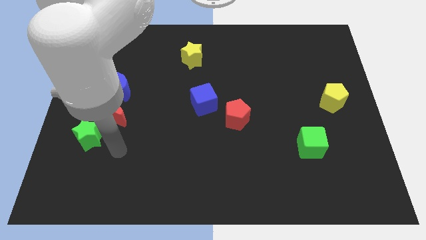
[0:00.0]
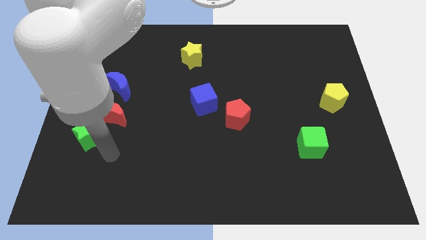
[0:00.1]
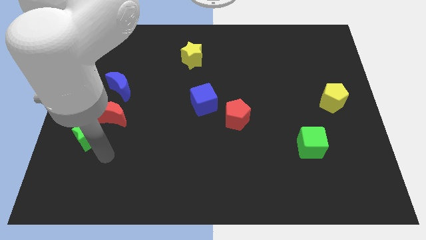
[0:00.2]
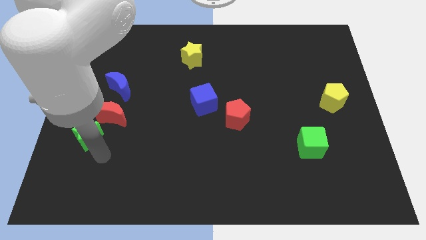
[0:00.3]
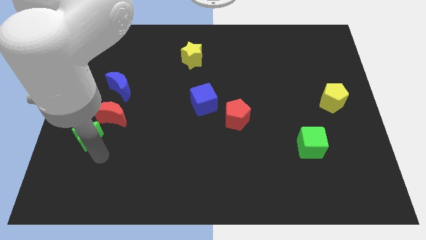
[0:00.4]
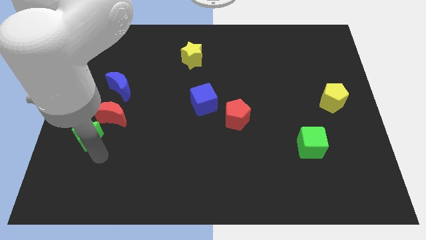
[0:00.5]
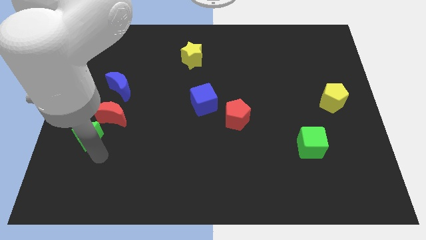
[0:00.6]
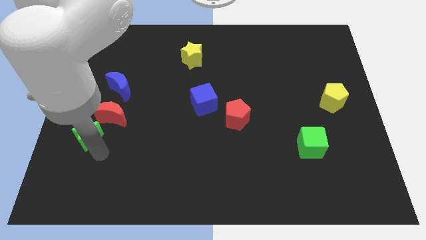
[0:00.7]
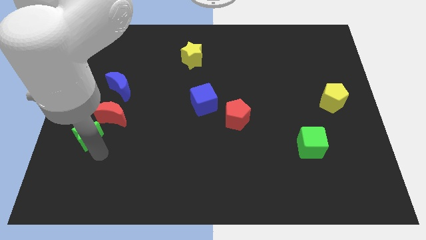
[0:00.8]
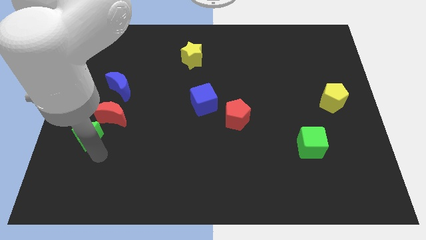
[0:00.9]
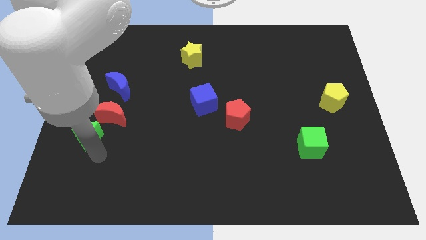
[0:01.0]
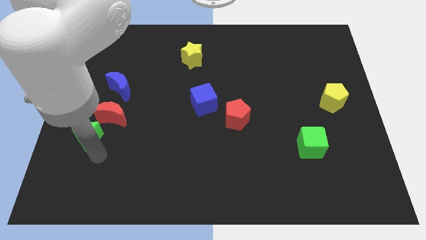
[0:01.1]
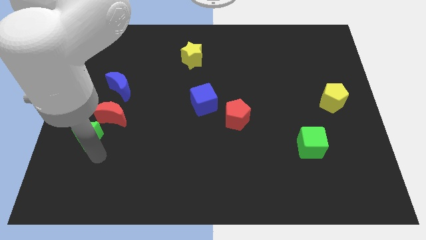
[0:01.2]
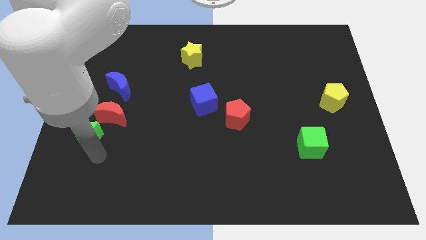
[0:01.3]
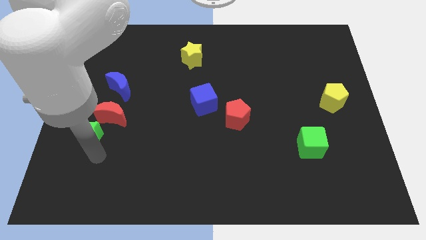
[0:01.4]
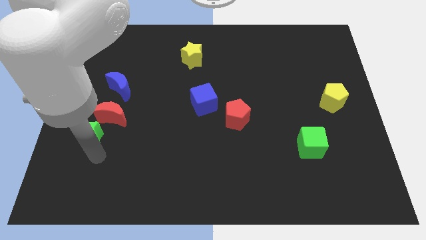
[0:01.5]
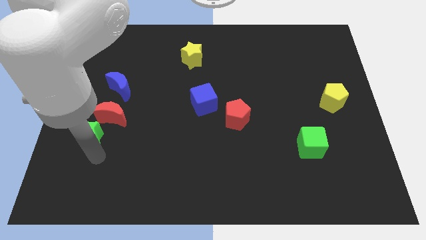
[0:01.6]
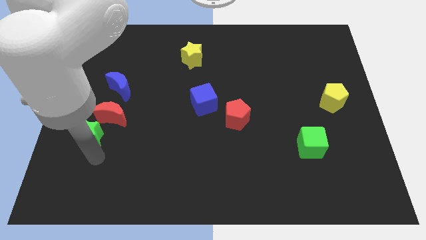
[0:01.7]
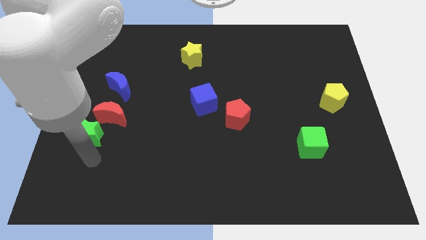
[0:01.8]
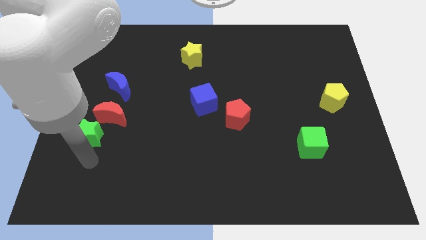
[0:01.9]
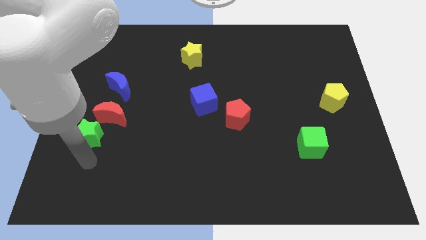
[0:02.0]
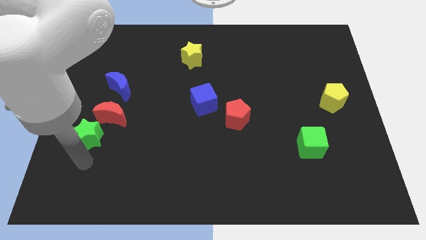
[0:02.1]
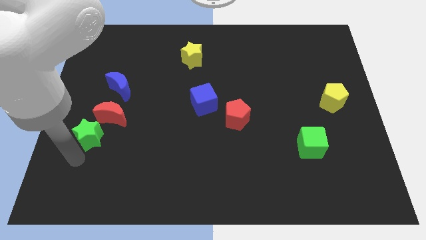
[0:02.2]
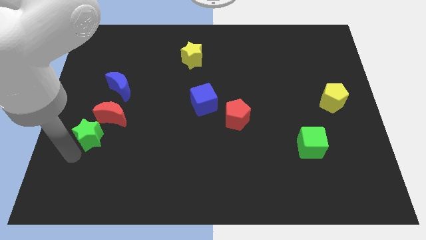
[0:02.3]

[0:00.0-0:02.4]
point your arm at the bottom of green star

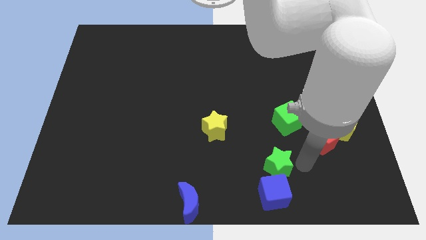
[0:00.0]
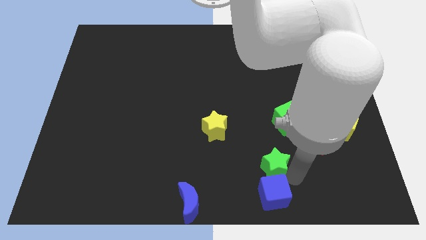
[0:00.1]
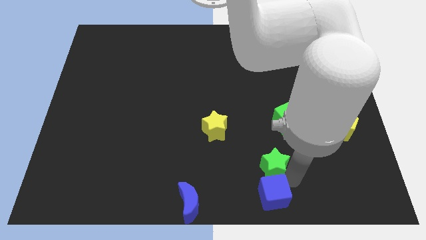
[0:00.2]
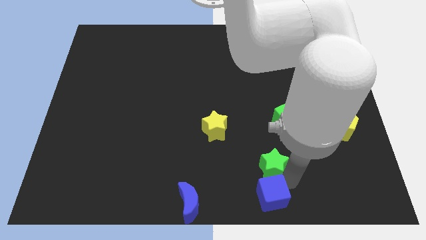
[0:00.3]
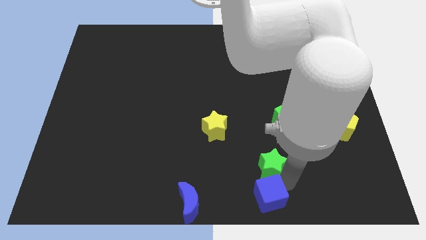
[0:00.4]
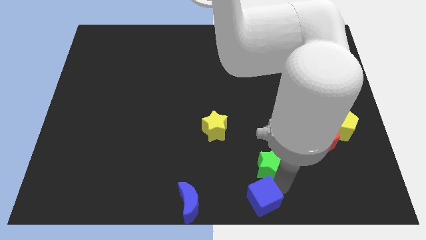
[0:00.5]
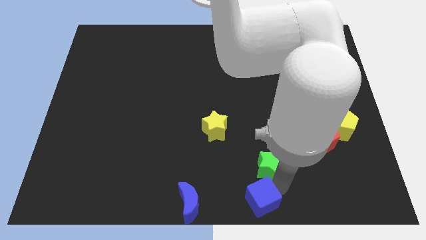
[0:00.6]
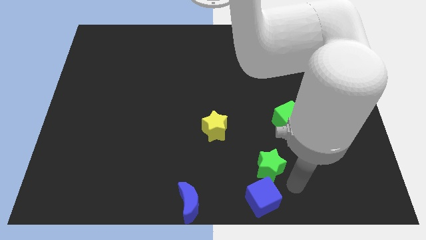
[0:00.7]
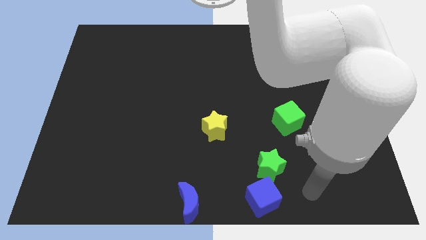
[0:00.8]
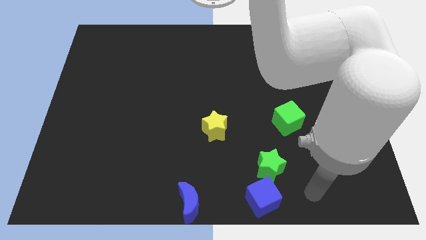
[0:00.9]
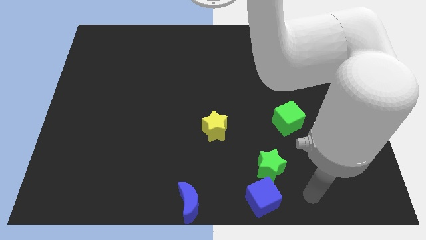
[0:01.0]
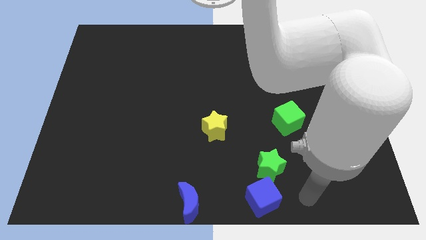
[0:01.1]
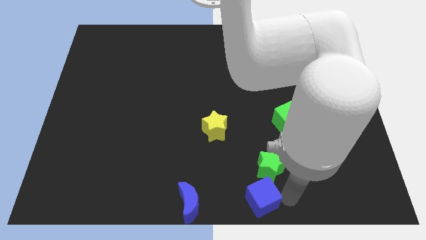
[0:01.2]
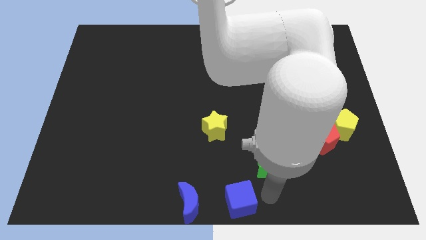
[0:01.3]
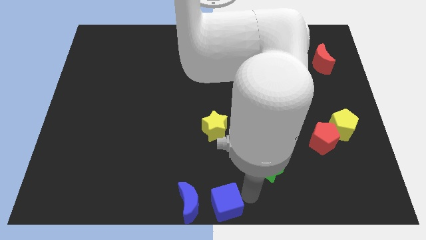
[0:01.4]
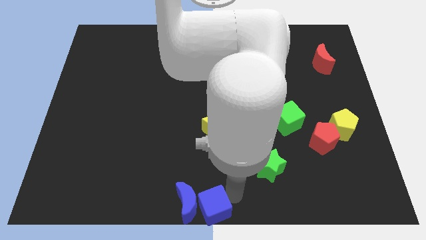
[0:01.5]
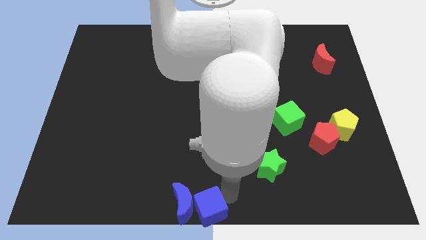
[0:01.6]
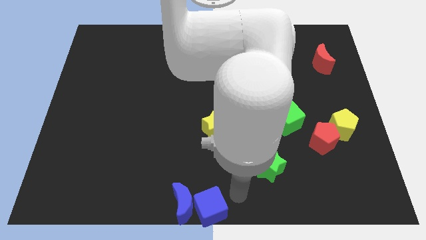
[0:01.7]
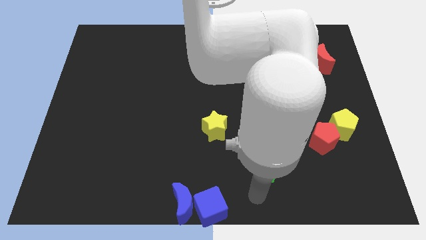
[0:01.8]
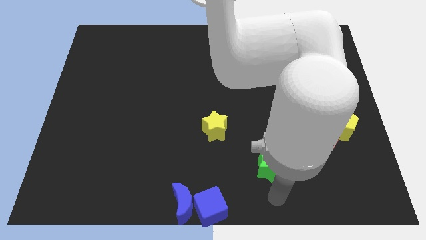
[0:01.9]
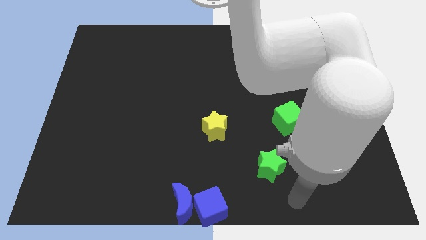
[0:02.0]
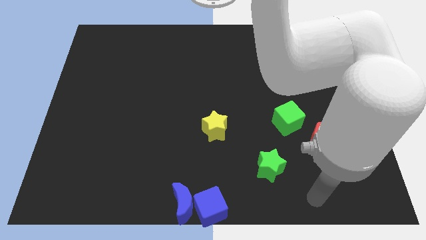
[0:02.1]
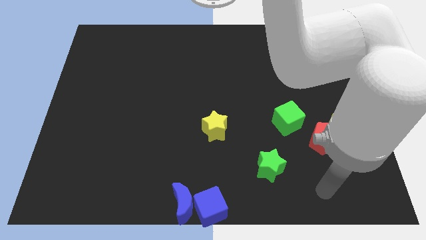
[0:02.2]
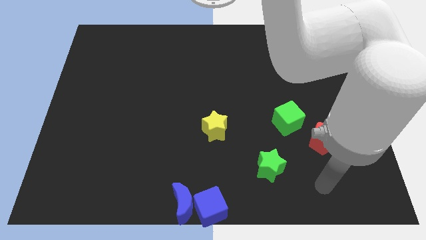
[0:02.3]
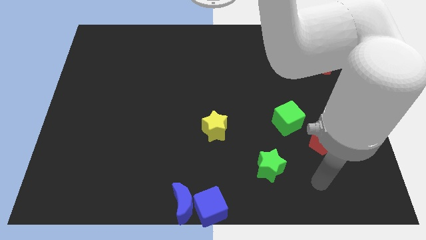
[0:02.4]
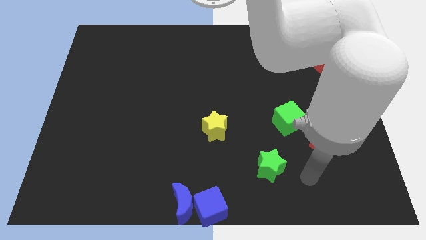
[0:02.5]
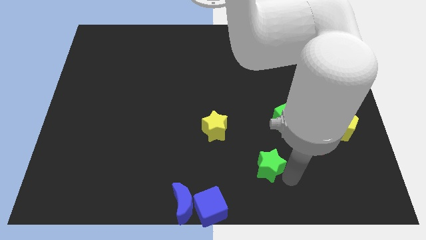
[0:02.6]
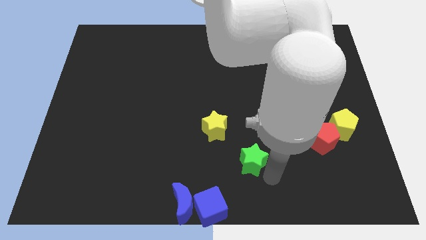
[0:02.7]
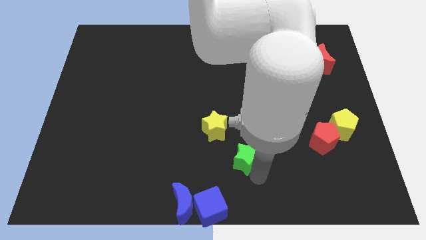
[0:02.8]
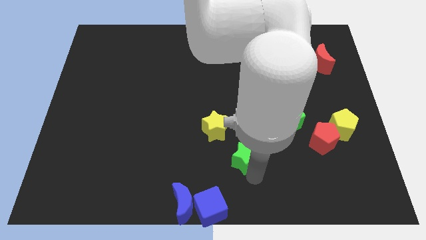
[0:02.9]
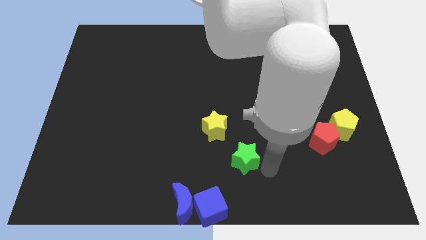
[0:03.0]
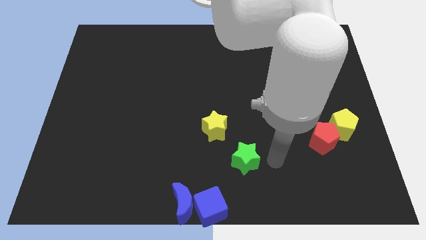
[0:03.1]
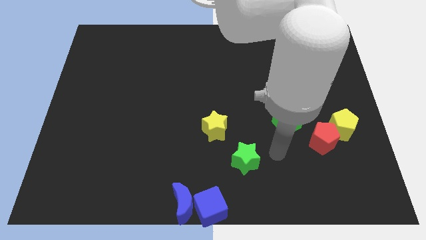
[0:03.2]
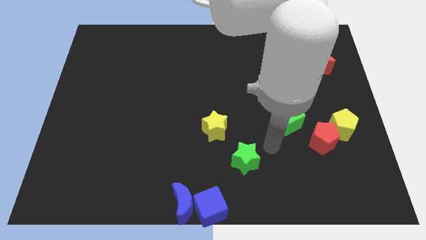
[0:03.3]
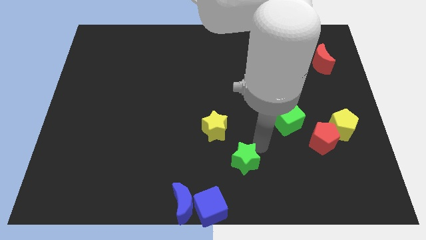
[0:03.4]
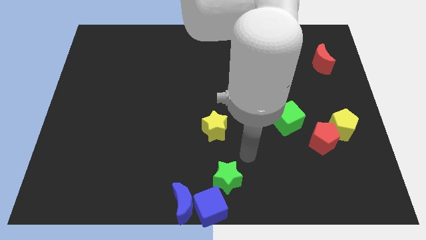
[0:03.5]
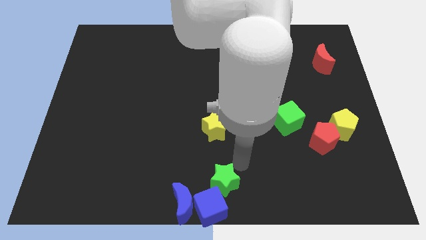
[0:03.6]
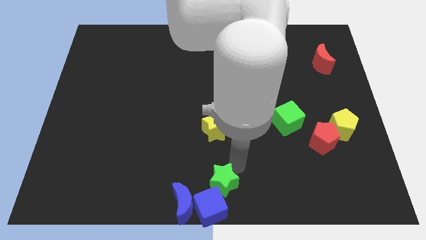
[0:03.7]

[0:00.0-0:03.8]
move the blue cube and the green star to the bottom center of the board

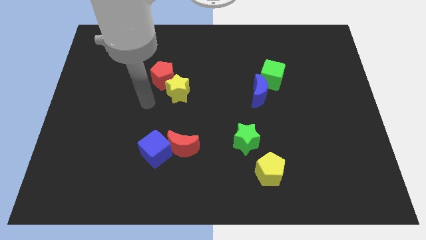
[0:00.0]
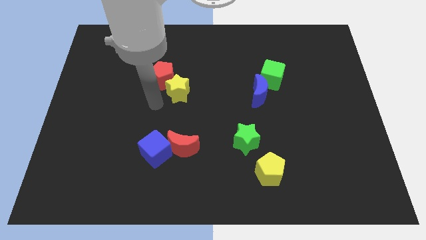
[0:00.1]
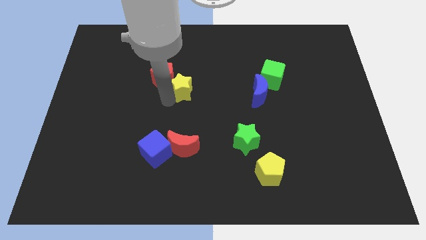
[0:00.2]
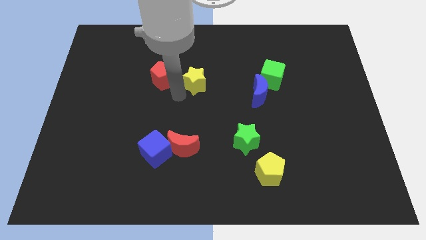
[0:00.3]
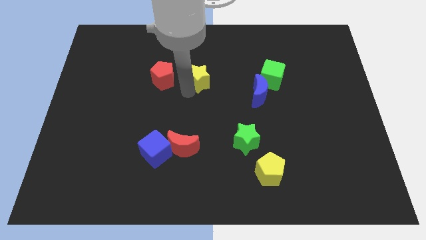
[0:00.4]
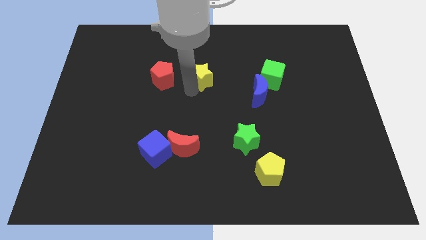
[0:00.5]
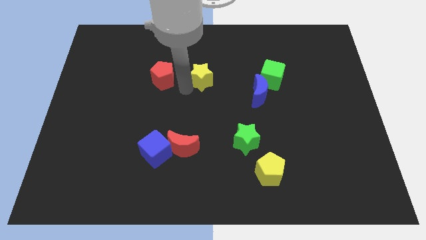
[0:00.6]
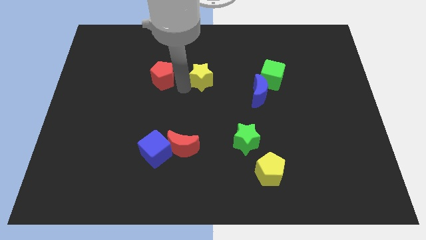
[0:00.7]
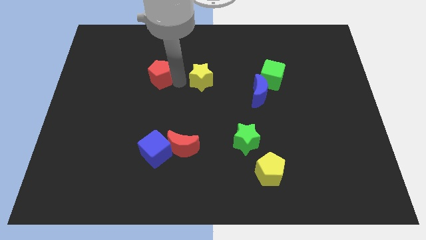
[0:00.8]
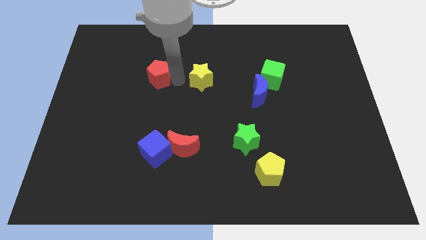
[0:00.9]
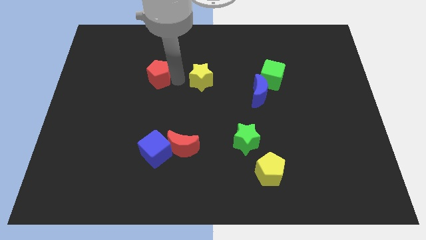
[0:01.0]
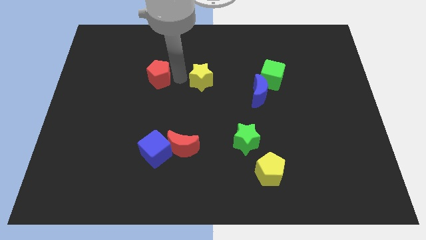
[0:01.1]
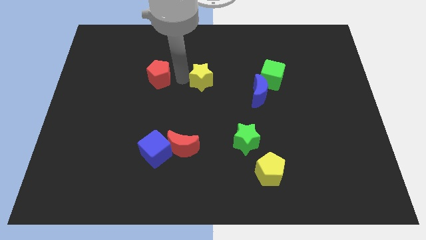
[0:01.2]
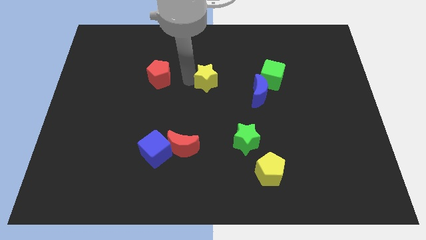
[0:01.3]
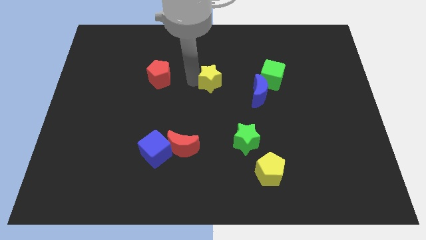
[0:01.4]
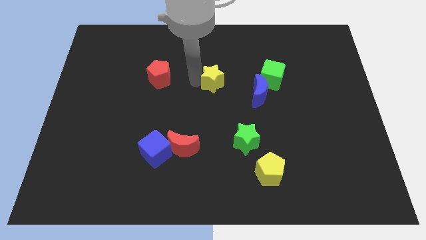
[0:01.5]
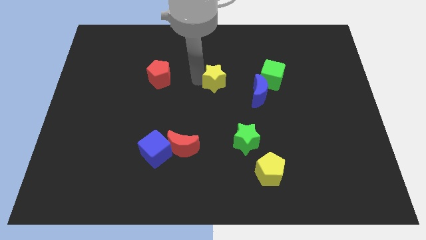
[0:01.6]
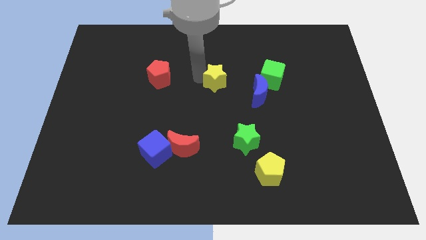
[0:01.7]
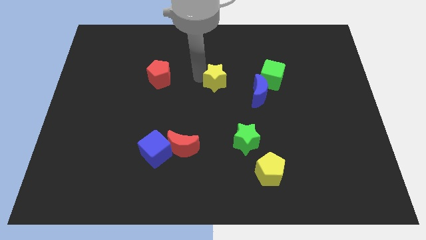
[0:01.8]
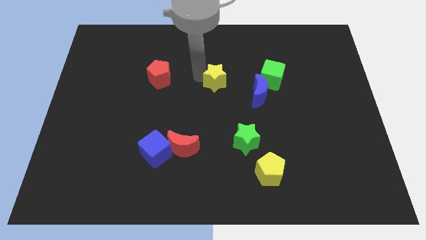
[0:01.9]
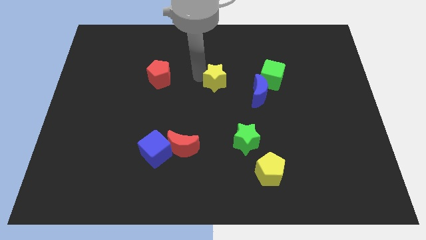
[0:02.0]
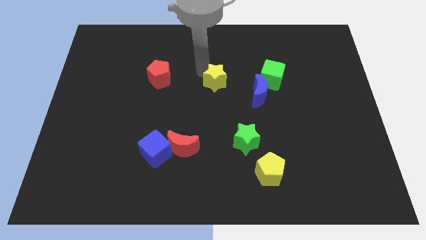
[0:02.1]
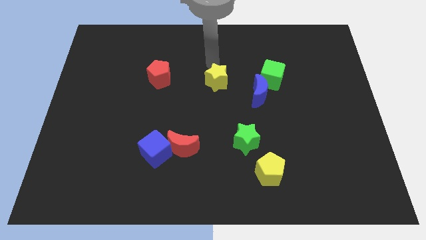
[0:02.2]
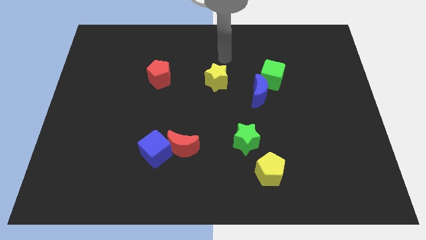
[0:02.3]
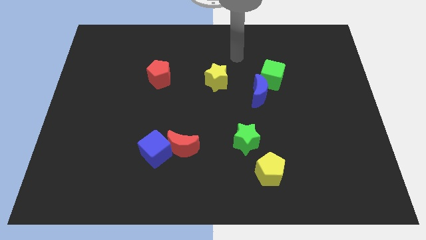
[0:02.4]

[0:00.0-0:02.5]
place the yellow star between he red pentagon and green cube

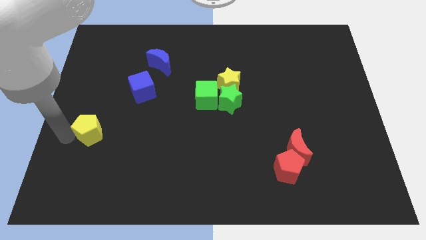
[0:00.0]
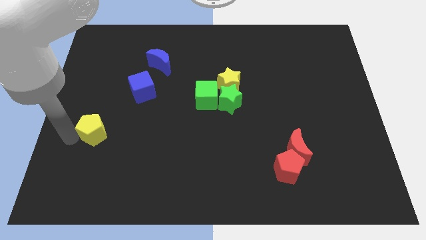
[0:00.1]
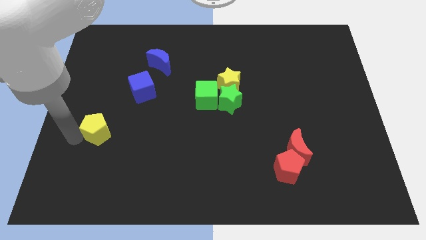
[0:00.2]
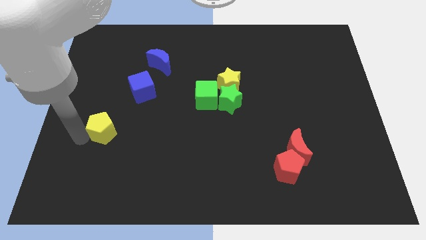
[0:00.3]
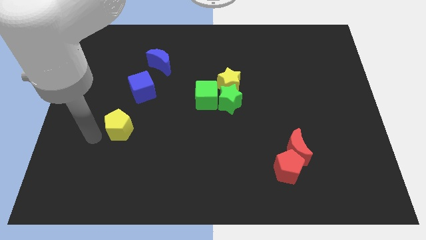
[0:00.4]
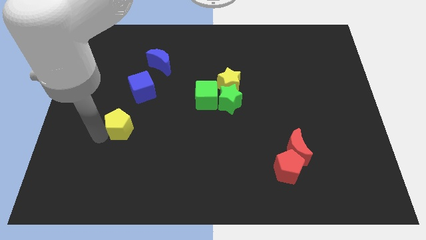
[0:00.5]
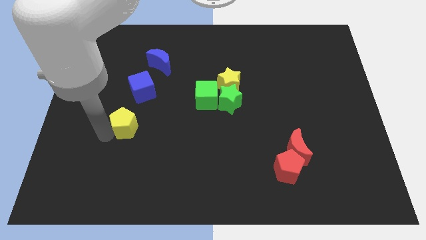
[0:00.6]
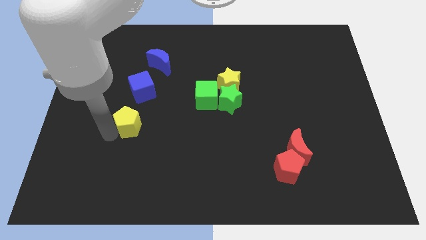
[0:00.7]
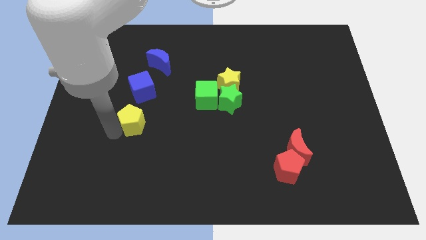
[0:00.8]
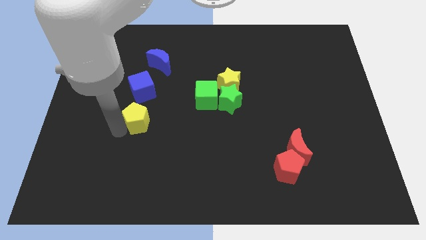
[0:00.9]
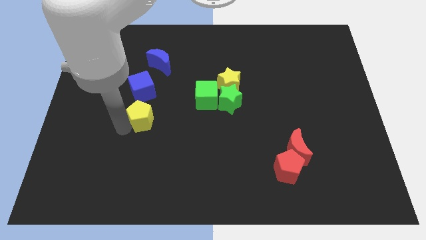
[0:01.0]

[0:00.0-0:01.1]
push the yellow pentagon to the bottom of the blue cube
